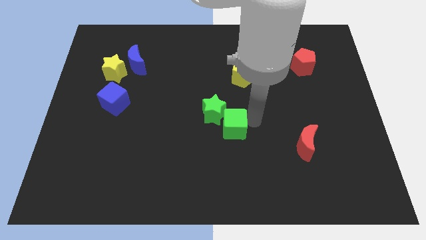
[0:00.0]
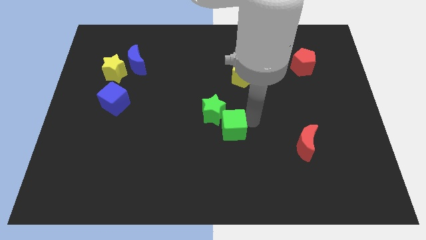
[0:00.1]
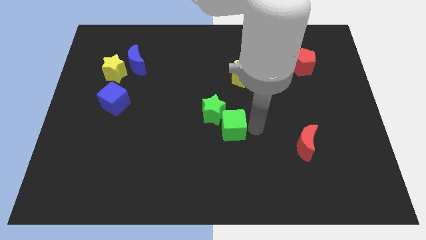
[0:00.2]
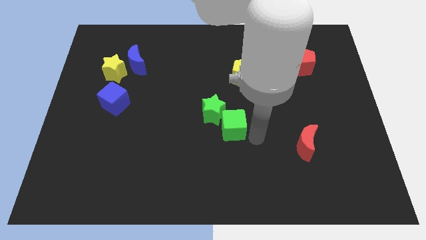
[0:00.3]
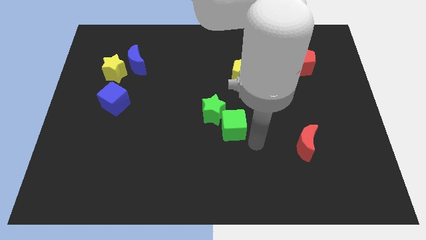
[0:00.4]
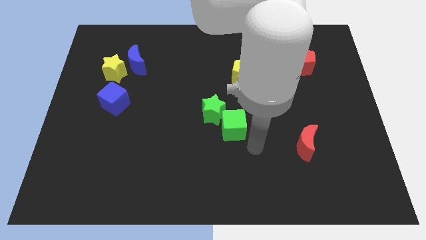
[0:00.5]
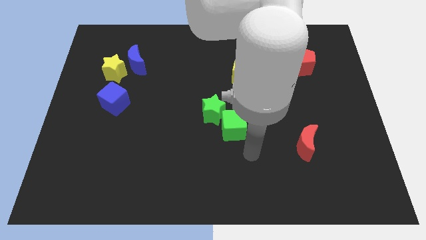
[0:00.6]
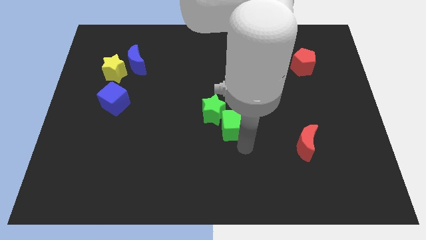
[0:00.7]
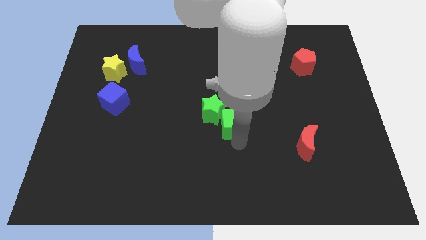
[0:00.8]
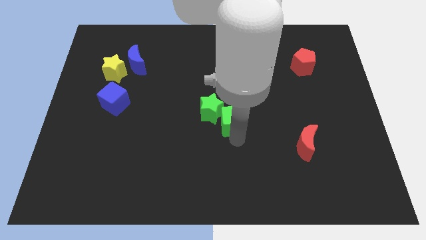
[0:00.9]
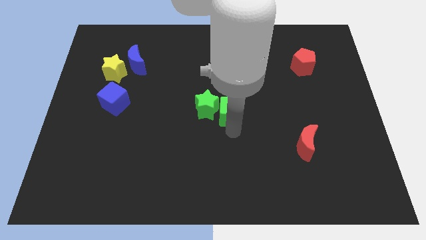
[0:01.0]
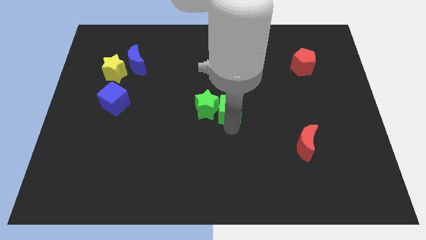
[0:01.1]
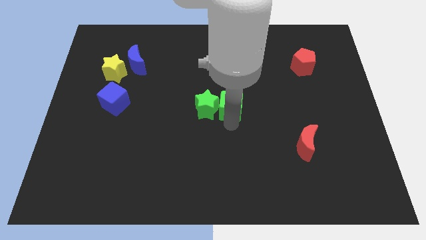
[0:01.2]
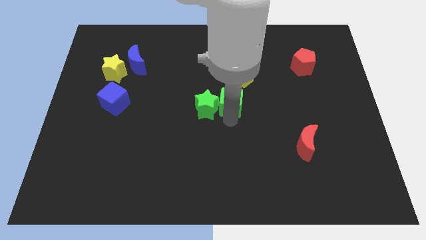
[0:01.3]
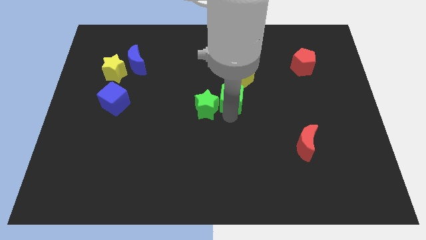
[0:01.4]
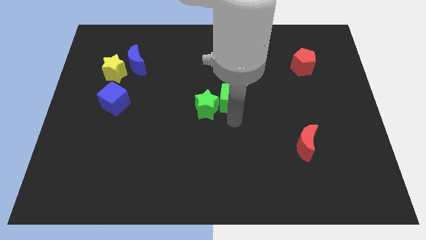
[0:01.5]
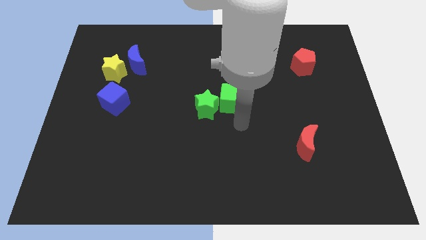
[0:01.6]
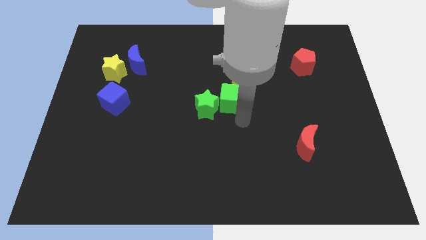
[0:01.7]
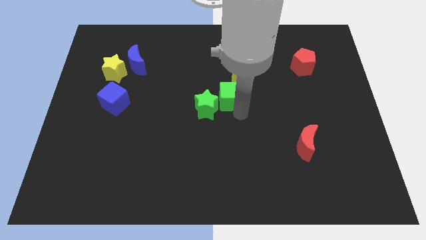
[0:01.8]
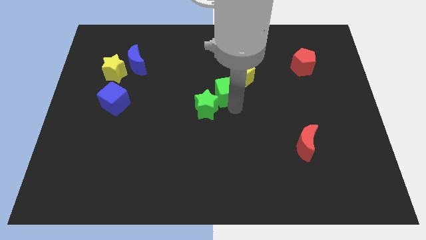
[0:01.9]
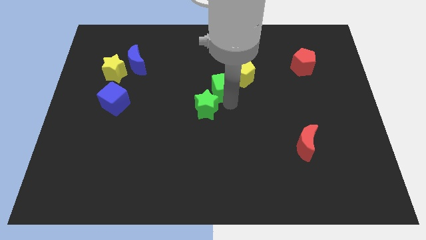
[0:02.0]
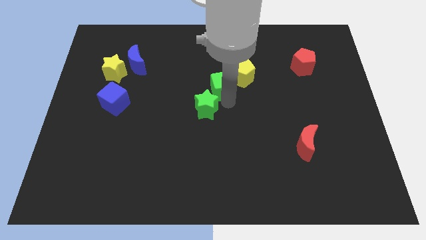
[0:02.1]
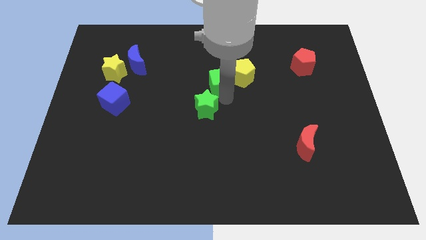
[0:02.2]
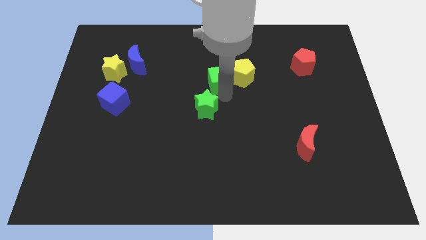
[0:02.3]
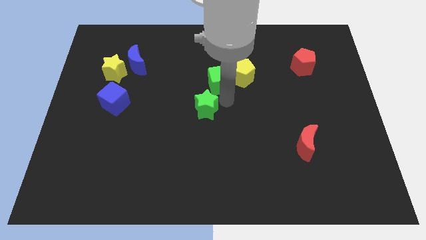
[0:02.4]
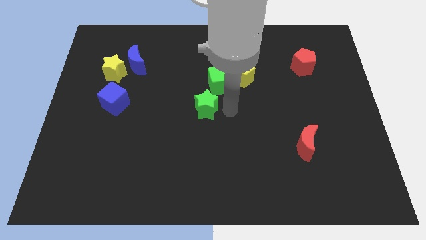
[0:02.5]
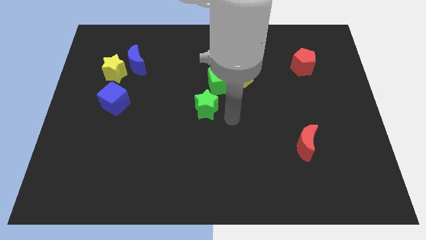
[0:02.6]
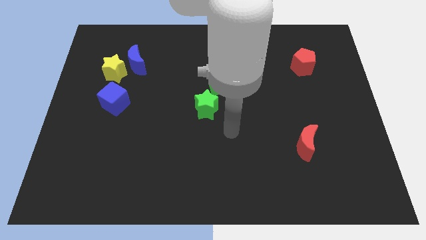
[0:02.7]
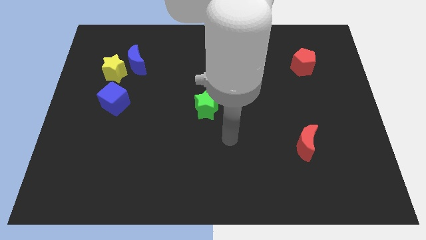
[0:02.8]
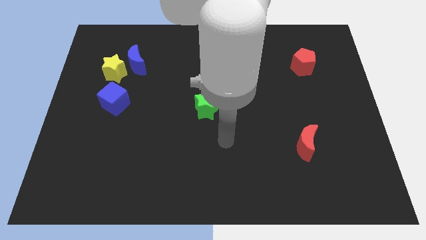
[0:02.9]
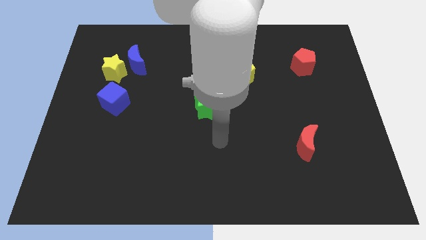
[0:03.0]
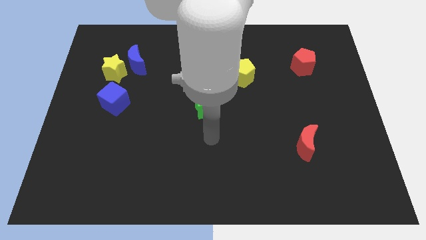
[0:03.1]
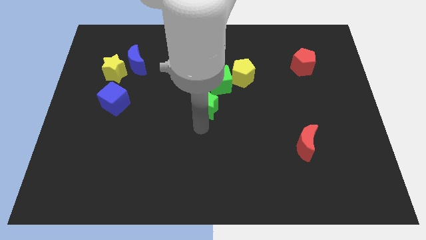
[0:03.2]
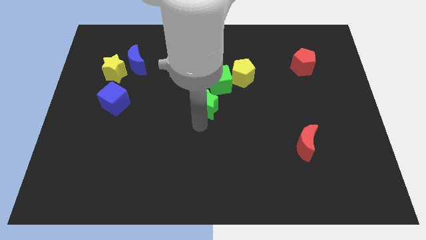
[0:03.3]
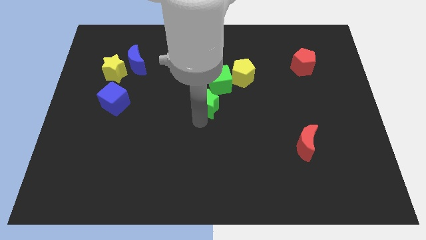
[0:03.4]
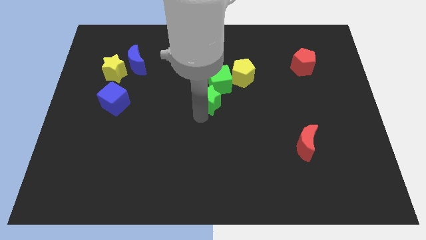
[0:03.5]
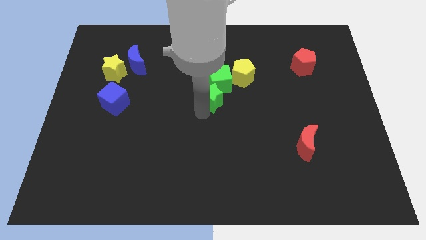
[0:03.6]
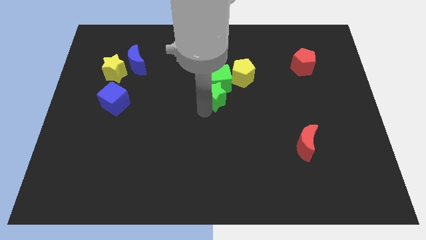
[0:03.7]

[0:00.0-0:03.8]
place the green blocks at the left of the yellow pentagon

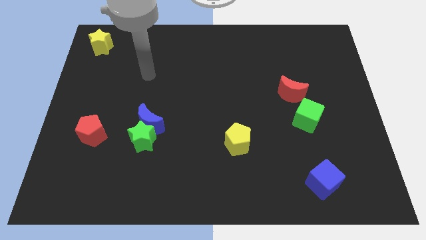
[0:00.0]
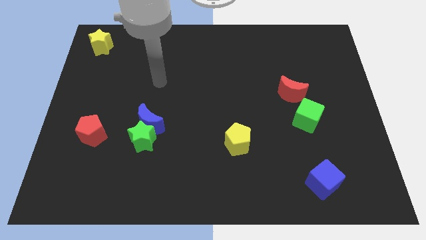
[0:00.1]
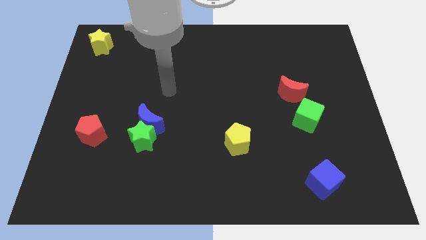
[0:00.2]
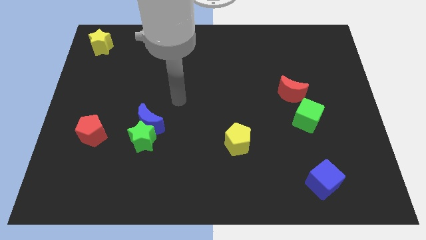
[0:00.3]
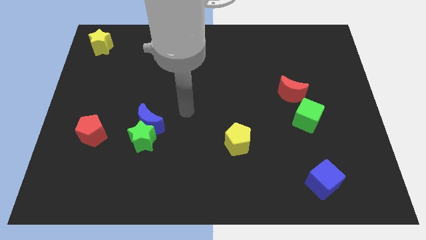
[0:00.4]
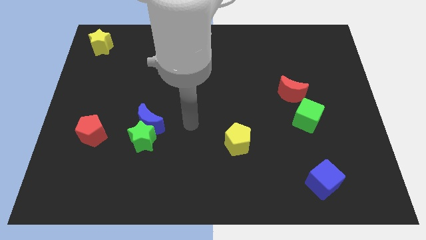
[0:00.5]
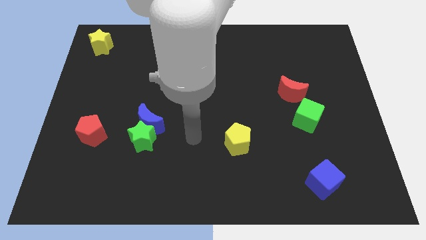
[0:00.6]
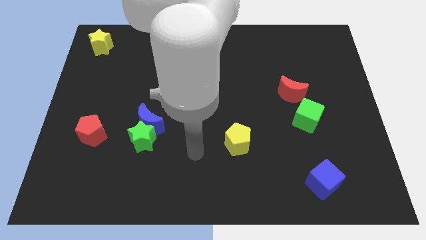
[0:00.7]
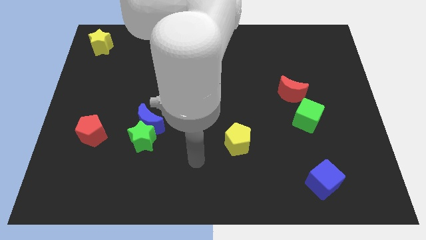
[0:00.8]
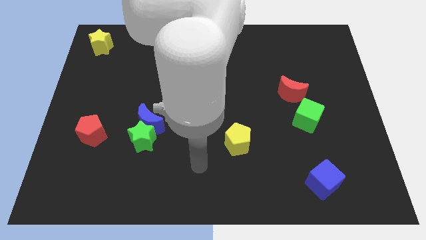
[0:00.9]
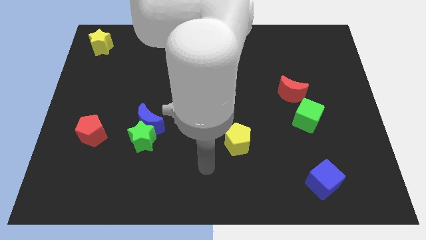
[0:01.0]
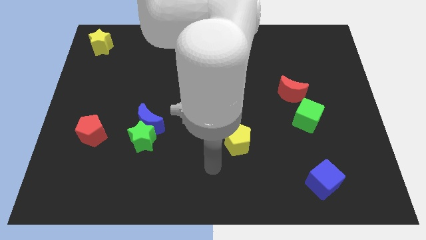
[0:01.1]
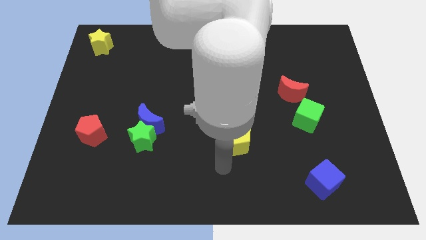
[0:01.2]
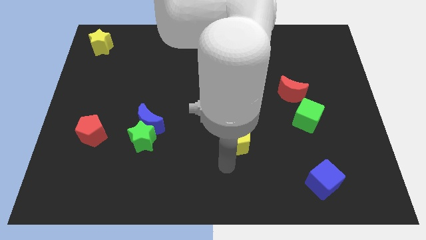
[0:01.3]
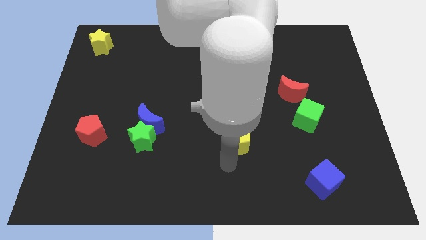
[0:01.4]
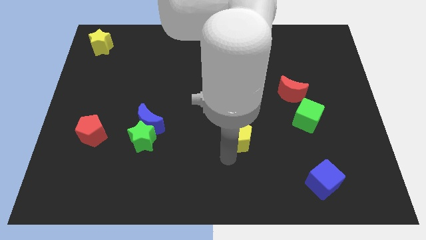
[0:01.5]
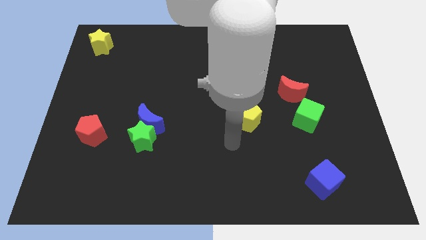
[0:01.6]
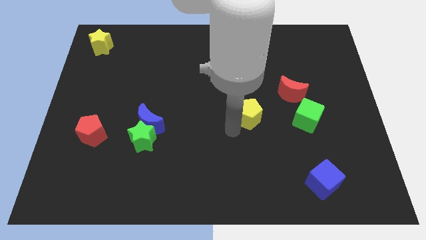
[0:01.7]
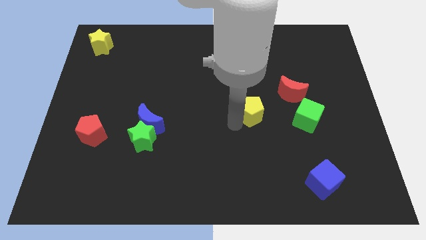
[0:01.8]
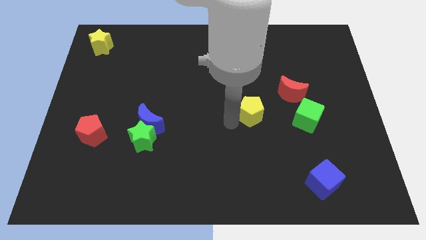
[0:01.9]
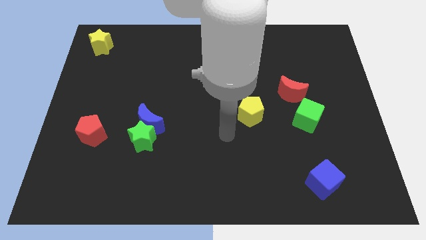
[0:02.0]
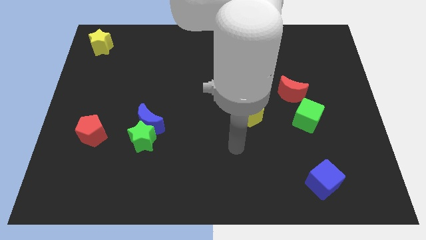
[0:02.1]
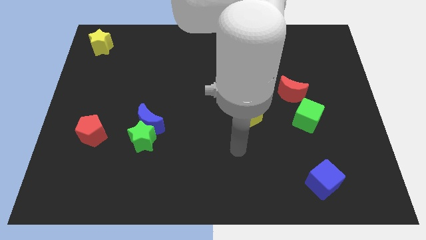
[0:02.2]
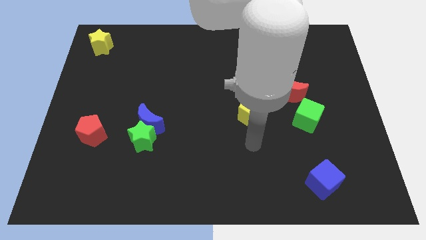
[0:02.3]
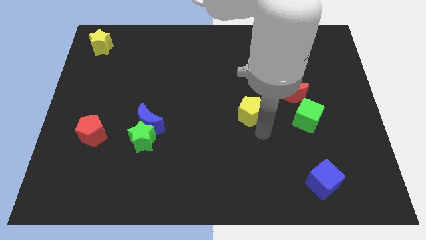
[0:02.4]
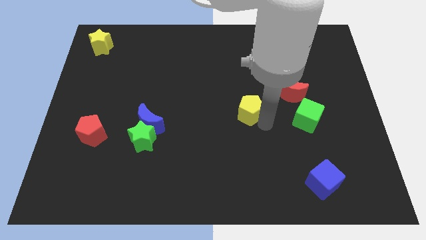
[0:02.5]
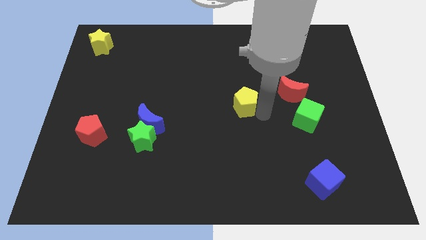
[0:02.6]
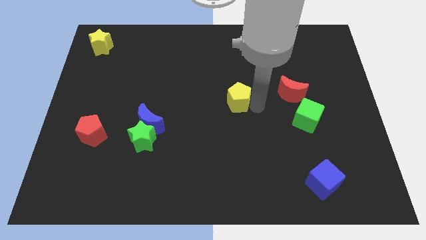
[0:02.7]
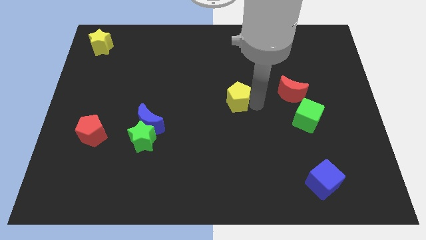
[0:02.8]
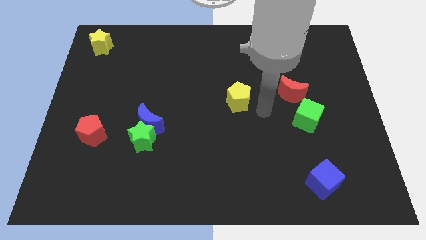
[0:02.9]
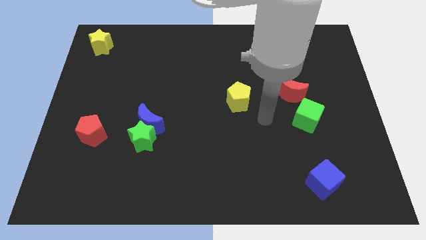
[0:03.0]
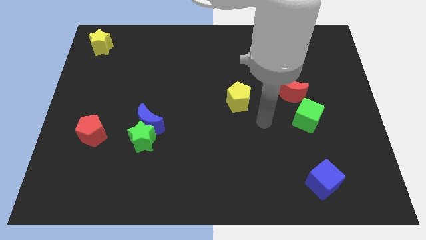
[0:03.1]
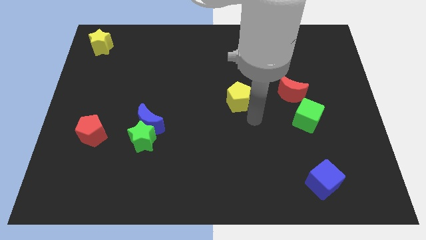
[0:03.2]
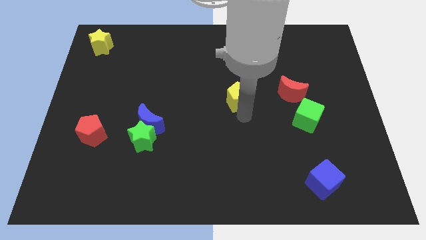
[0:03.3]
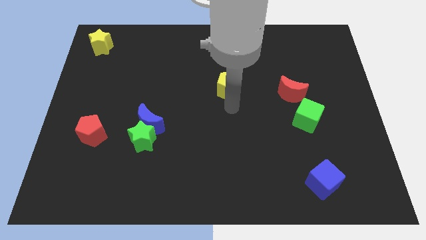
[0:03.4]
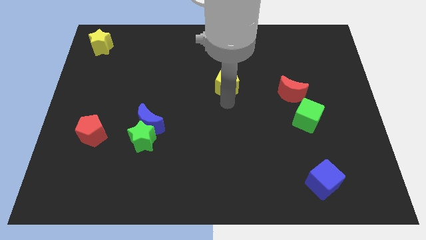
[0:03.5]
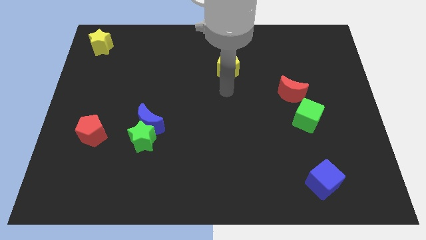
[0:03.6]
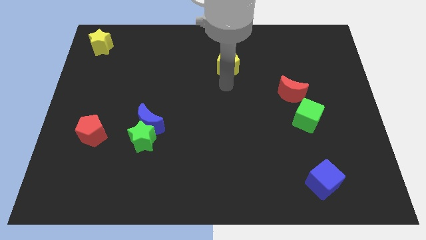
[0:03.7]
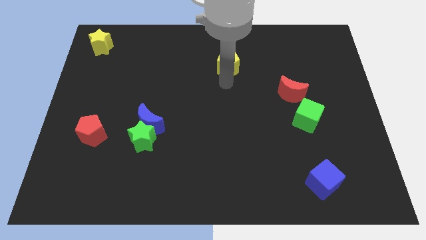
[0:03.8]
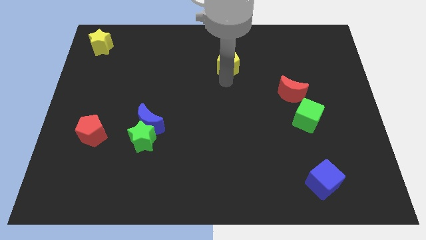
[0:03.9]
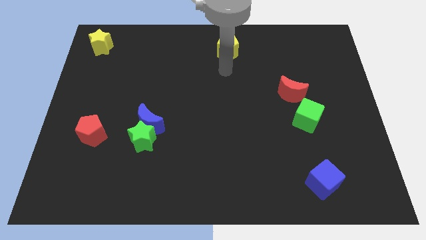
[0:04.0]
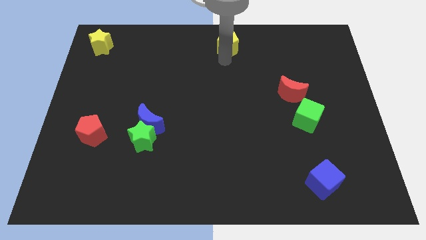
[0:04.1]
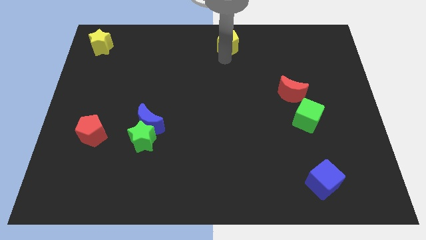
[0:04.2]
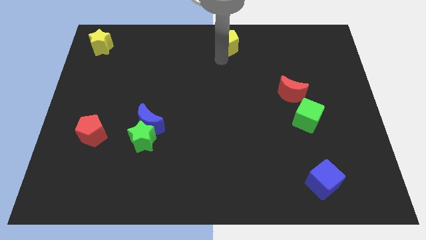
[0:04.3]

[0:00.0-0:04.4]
push the yellow pentagon towards the top center of the board

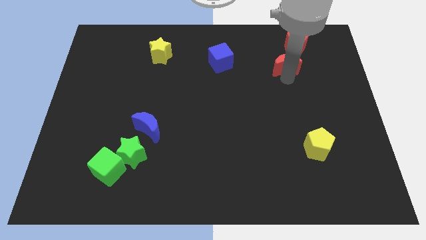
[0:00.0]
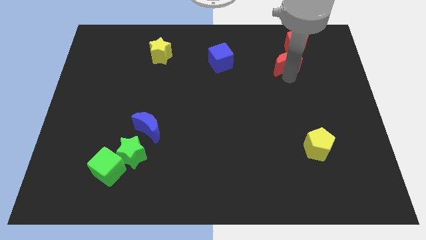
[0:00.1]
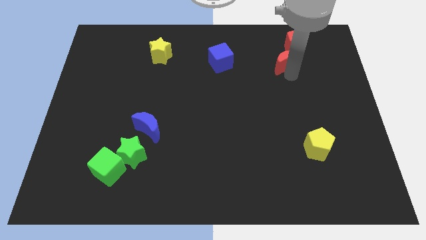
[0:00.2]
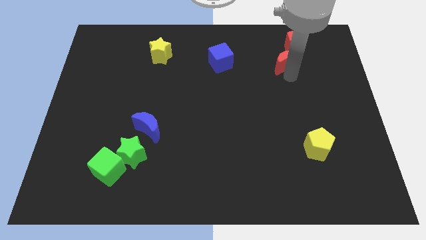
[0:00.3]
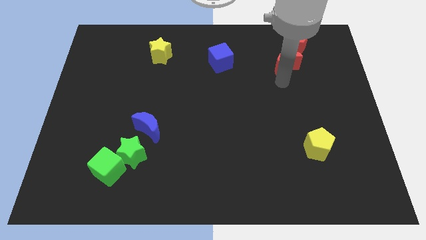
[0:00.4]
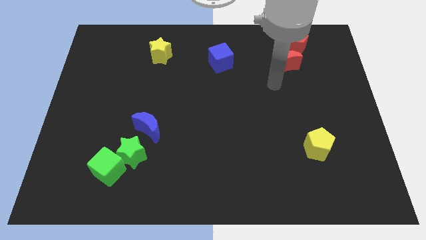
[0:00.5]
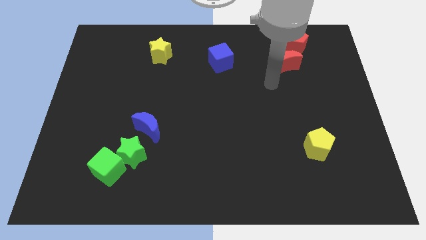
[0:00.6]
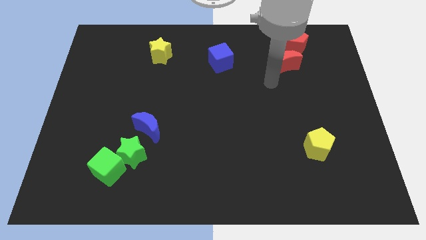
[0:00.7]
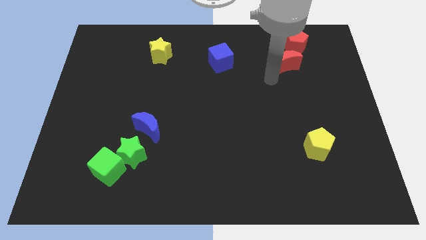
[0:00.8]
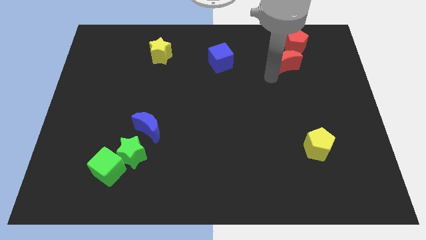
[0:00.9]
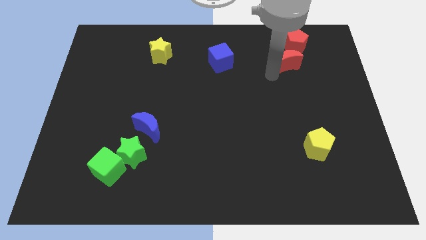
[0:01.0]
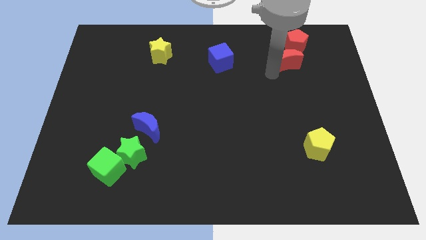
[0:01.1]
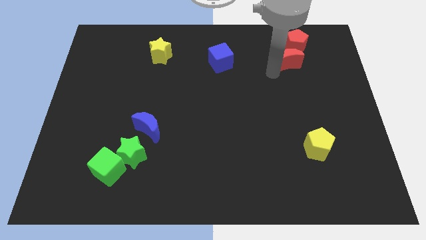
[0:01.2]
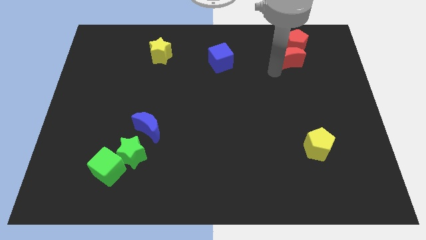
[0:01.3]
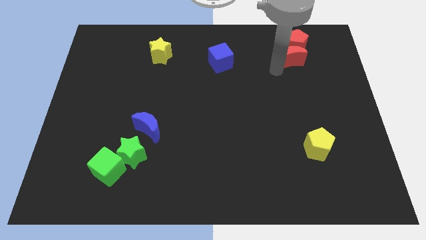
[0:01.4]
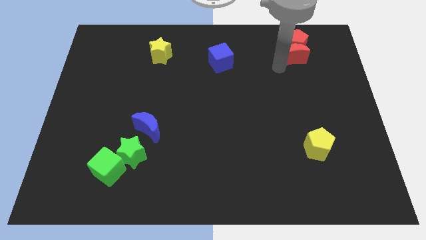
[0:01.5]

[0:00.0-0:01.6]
move red moon below the red pentagon
